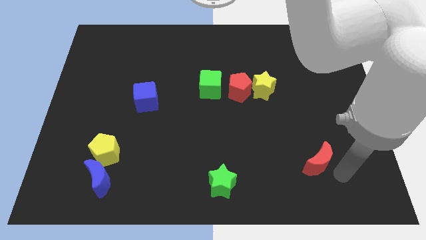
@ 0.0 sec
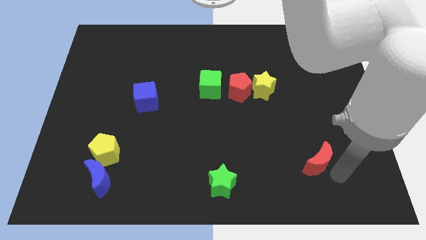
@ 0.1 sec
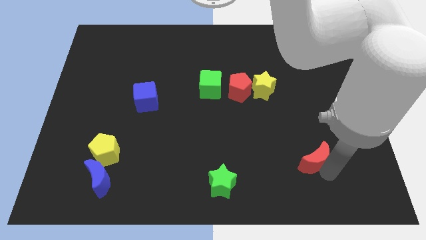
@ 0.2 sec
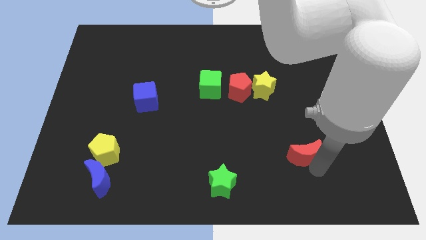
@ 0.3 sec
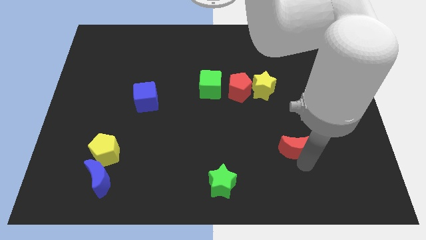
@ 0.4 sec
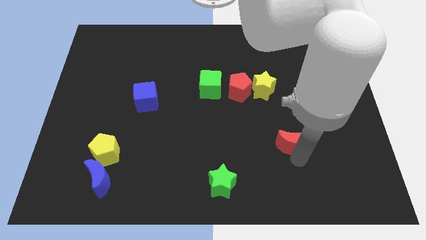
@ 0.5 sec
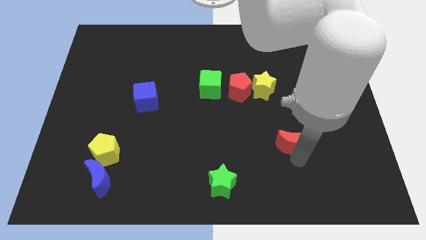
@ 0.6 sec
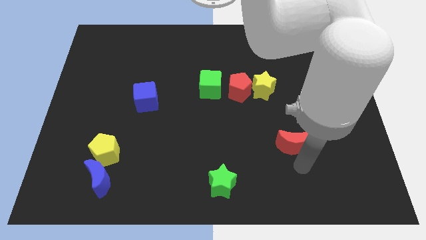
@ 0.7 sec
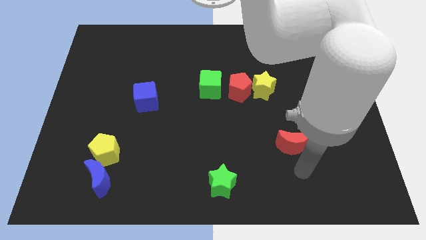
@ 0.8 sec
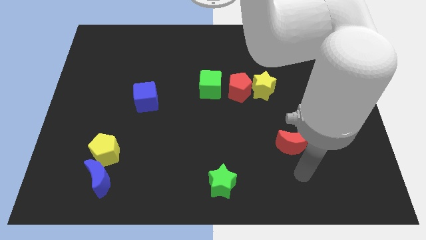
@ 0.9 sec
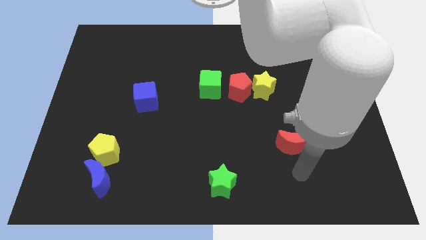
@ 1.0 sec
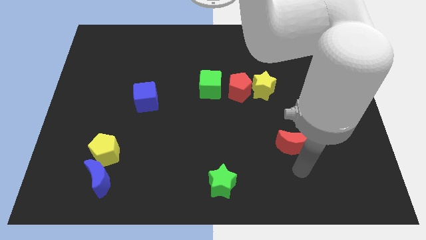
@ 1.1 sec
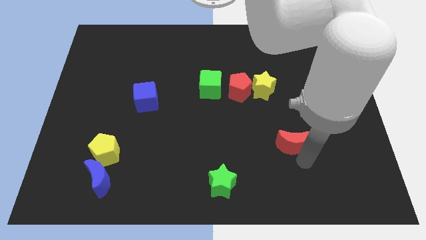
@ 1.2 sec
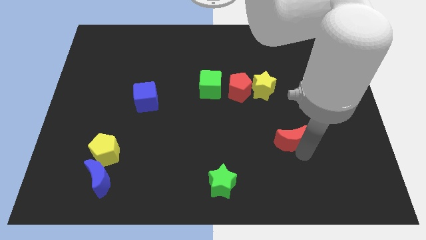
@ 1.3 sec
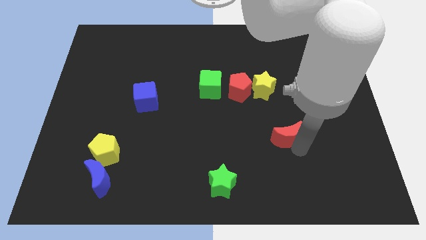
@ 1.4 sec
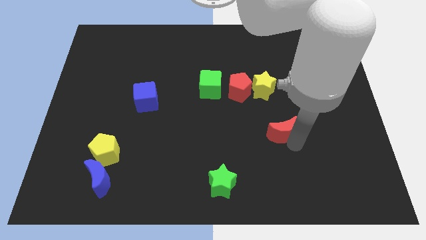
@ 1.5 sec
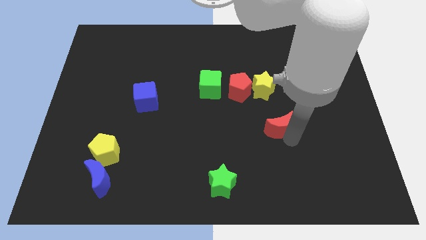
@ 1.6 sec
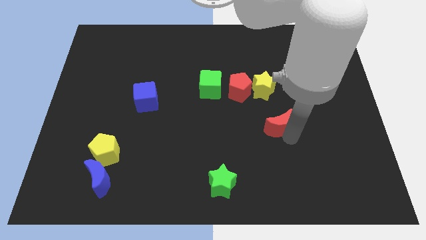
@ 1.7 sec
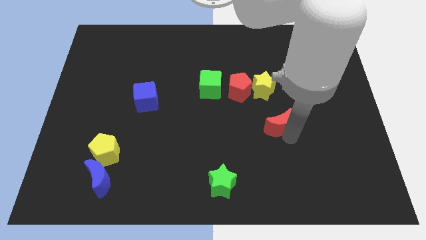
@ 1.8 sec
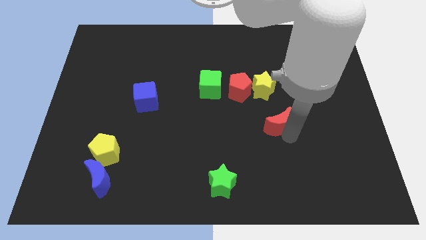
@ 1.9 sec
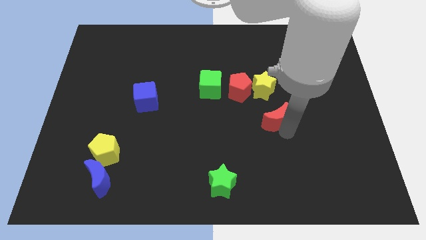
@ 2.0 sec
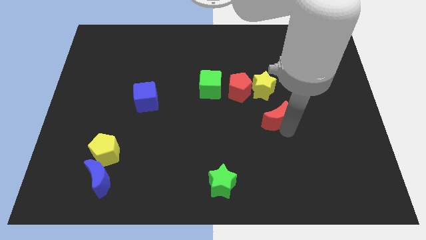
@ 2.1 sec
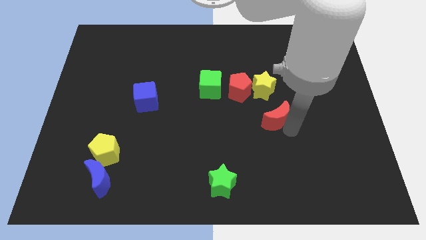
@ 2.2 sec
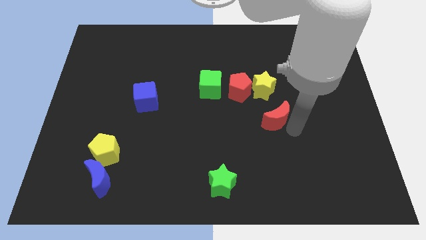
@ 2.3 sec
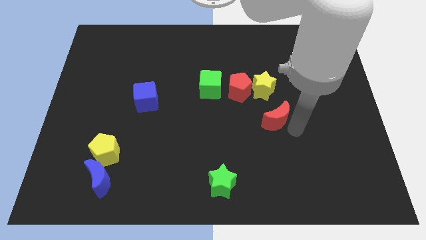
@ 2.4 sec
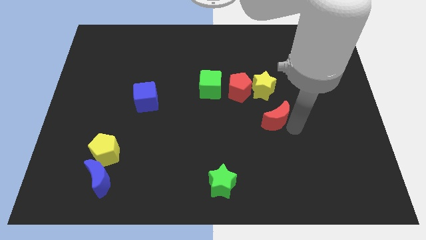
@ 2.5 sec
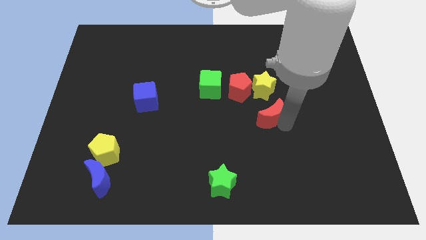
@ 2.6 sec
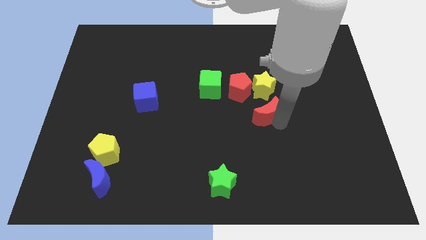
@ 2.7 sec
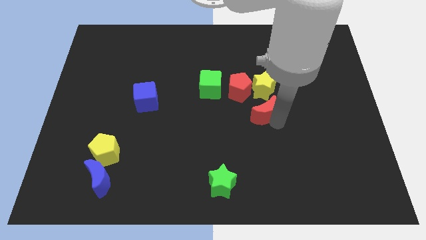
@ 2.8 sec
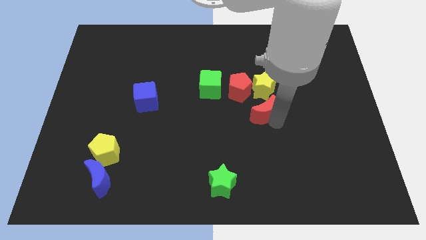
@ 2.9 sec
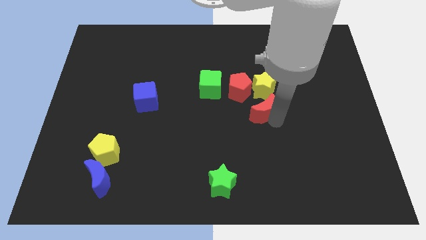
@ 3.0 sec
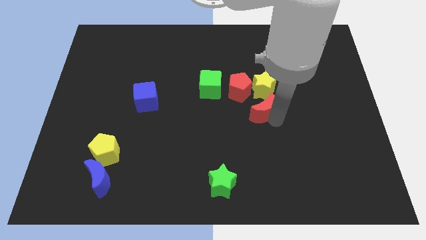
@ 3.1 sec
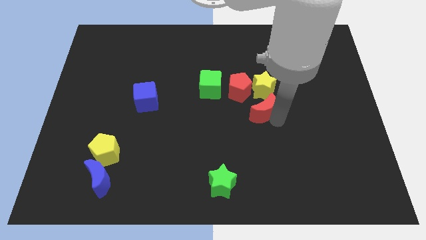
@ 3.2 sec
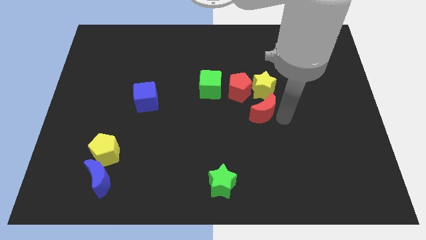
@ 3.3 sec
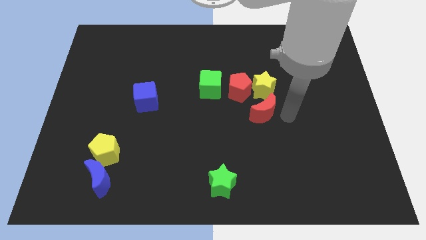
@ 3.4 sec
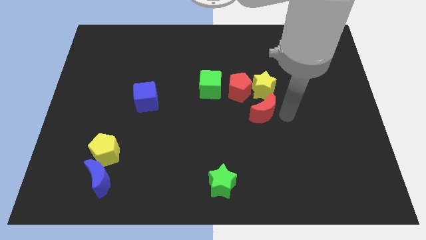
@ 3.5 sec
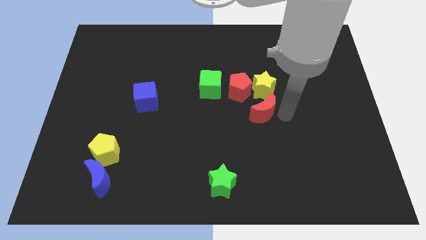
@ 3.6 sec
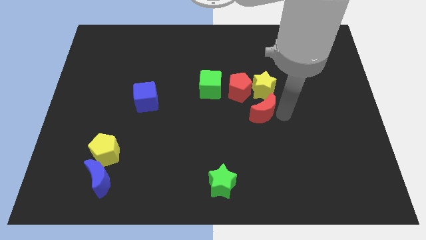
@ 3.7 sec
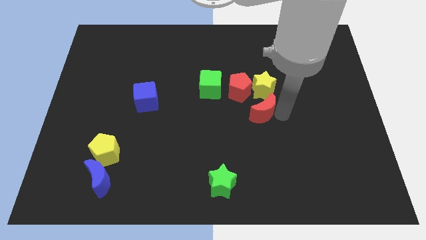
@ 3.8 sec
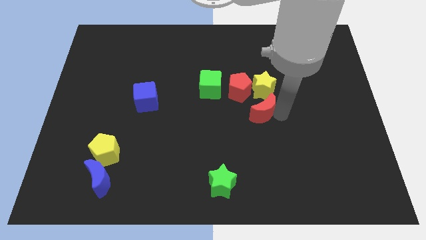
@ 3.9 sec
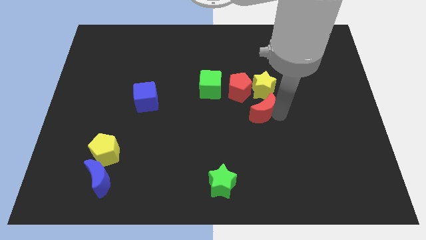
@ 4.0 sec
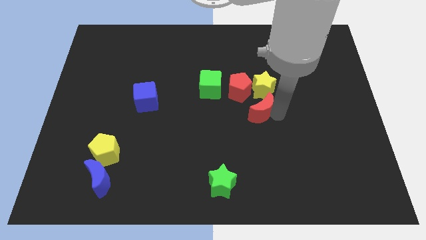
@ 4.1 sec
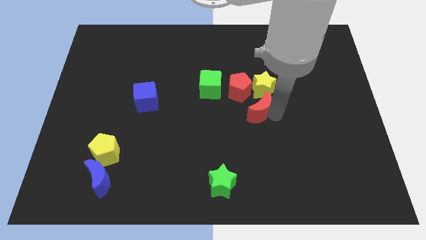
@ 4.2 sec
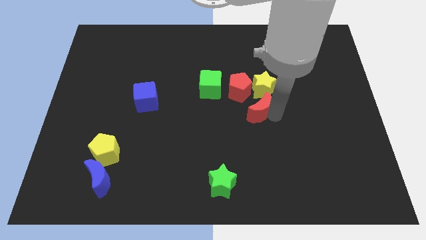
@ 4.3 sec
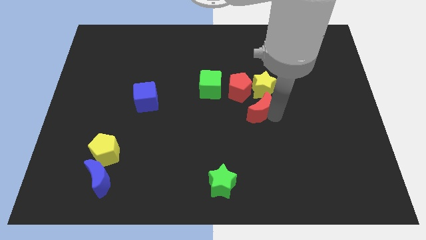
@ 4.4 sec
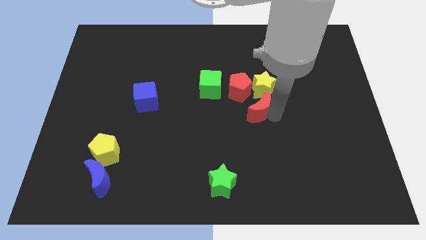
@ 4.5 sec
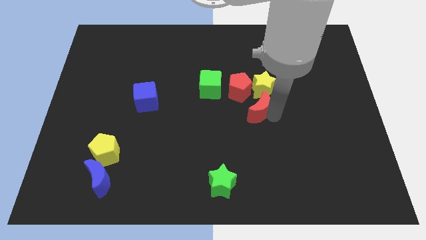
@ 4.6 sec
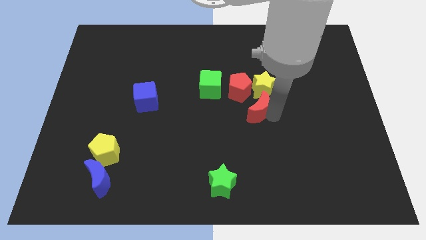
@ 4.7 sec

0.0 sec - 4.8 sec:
place the red crescent below the yellow star

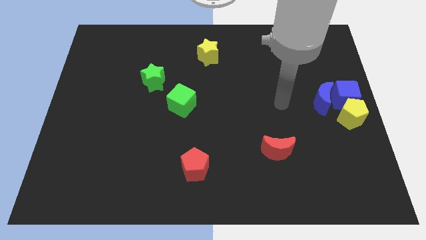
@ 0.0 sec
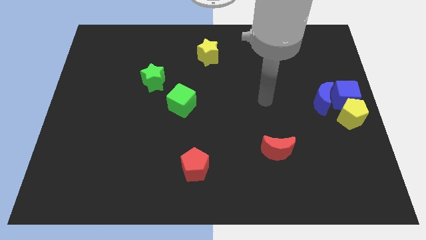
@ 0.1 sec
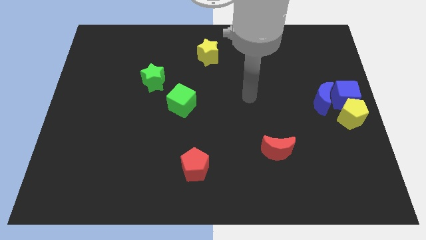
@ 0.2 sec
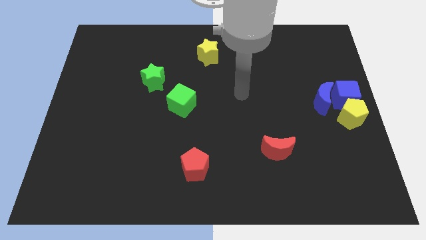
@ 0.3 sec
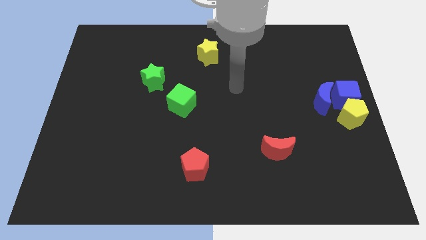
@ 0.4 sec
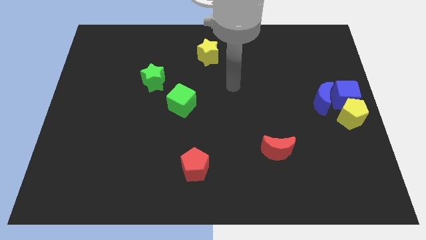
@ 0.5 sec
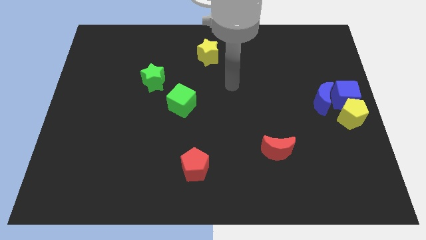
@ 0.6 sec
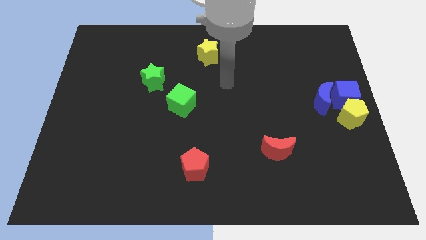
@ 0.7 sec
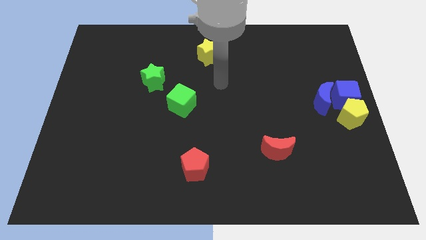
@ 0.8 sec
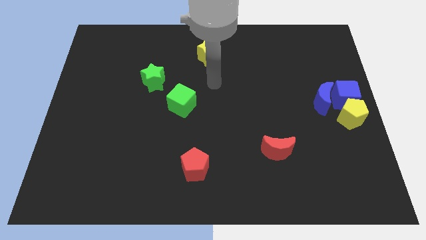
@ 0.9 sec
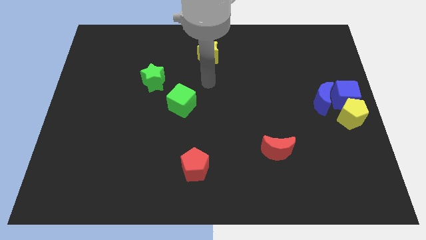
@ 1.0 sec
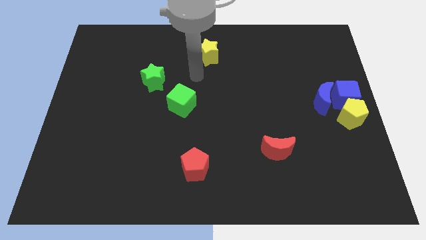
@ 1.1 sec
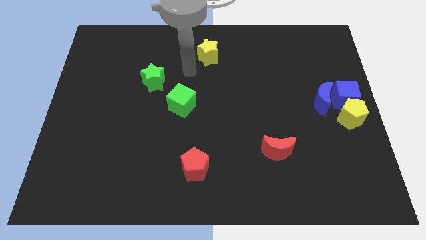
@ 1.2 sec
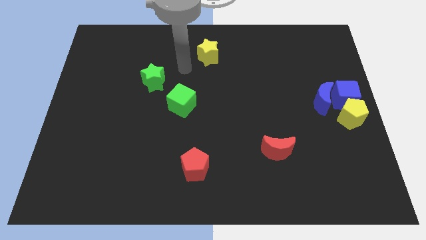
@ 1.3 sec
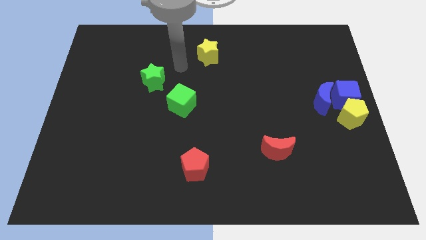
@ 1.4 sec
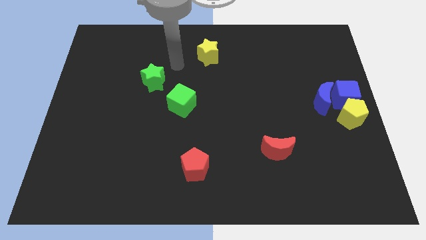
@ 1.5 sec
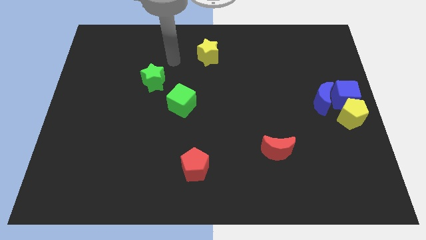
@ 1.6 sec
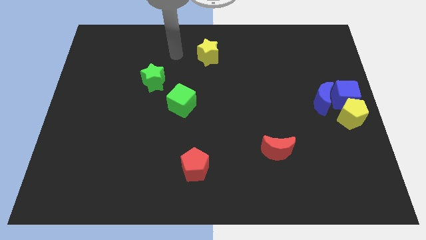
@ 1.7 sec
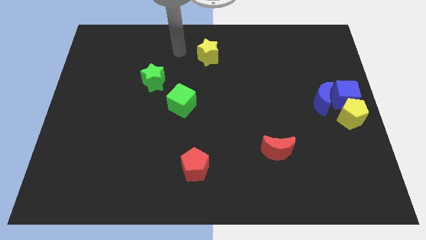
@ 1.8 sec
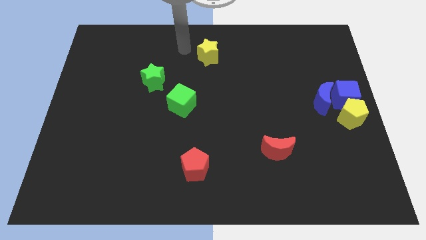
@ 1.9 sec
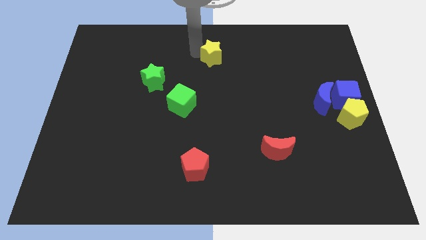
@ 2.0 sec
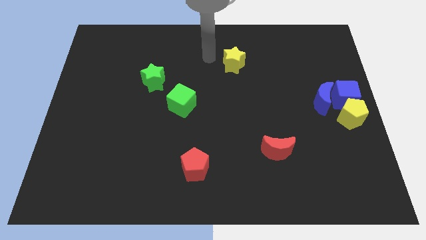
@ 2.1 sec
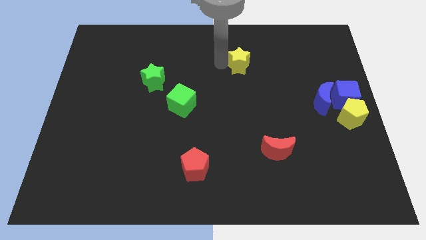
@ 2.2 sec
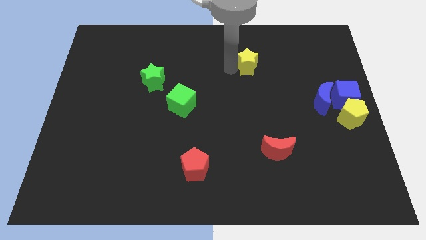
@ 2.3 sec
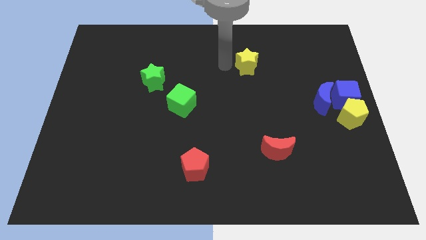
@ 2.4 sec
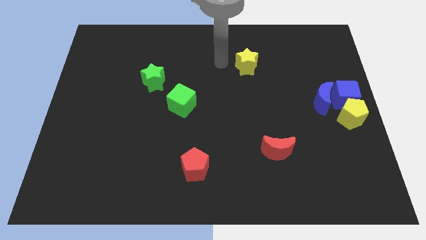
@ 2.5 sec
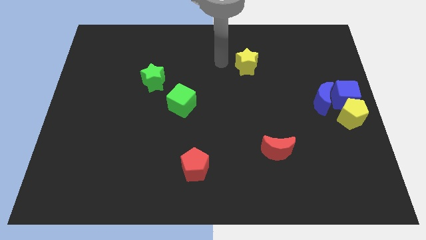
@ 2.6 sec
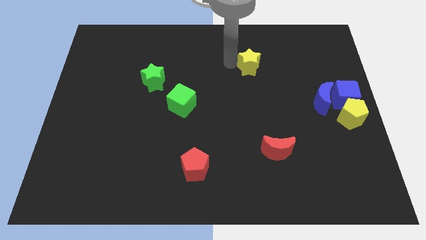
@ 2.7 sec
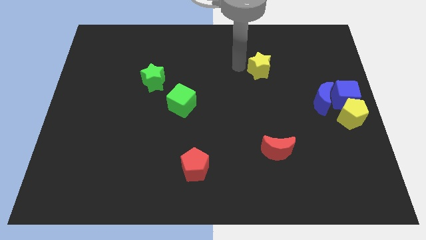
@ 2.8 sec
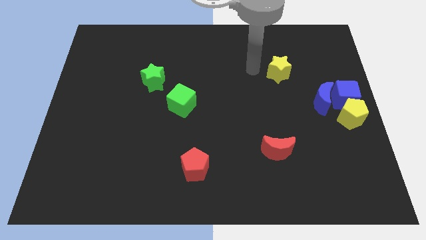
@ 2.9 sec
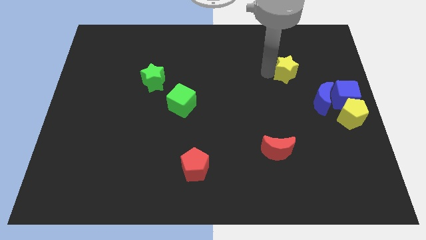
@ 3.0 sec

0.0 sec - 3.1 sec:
move the yellow star vertically at the top side of the red crescent

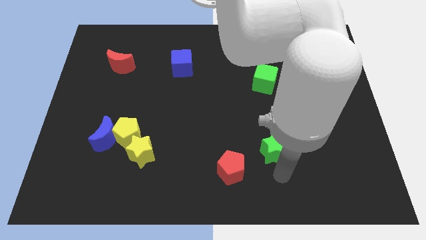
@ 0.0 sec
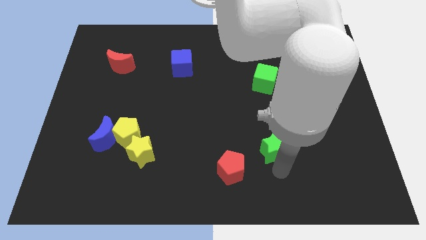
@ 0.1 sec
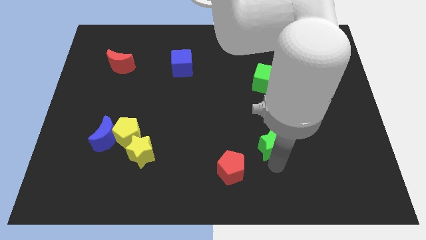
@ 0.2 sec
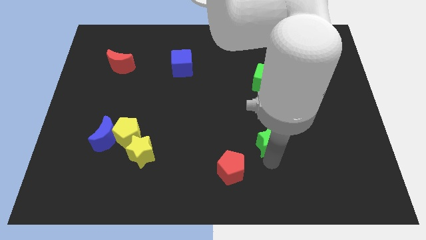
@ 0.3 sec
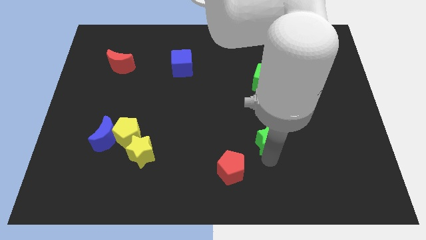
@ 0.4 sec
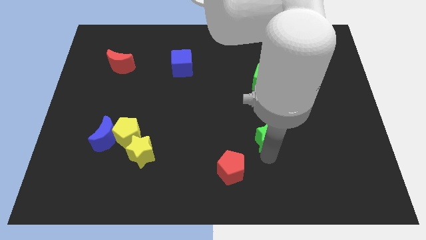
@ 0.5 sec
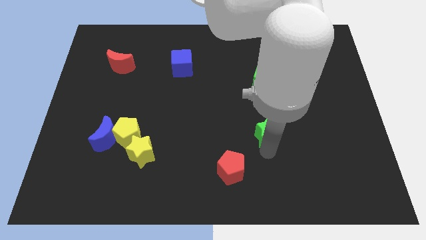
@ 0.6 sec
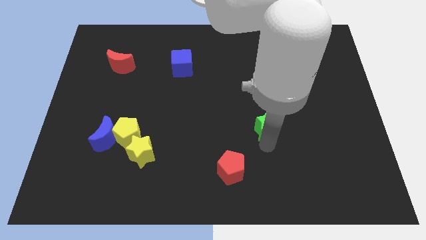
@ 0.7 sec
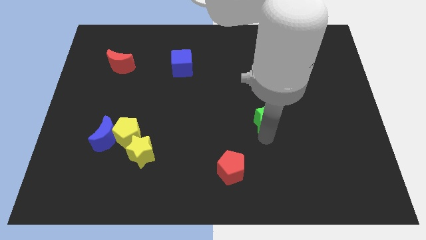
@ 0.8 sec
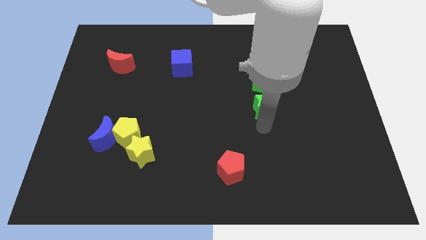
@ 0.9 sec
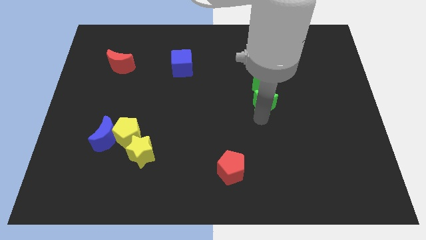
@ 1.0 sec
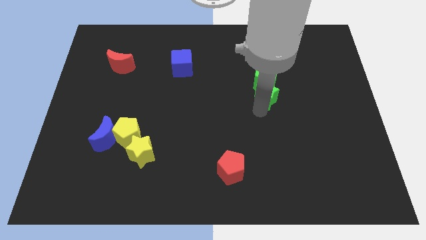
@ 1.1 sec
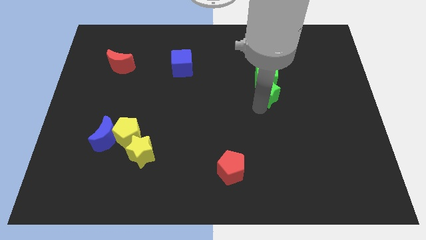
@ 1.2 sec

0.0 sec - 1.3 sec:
move green star towards green cube
